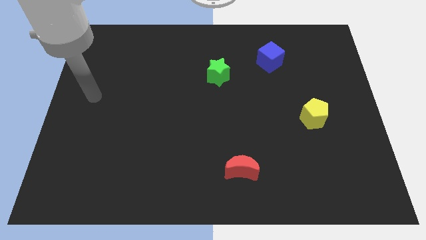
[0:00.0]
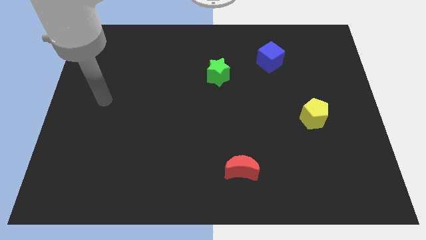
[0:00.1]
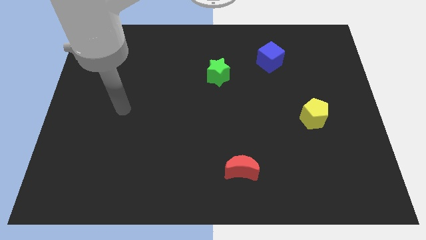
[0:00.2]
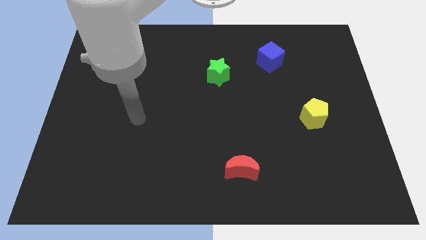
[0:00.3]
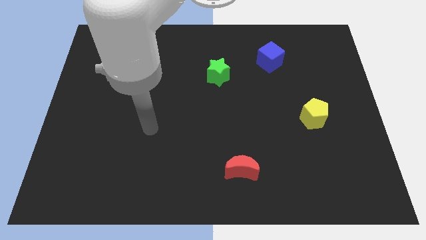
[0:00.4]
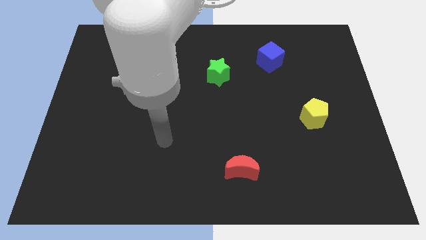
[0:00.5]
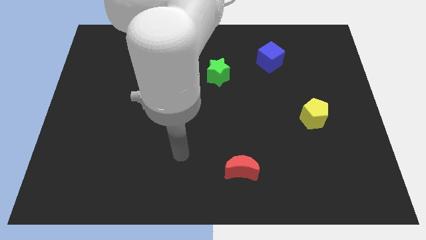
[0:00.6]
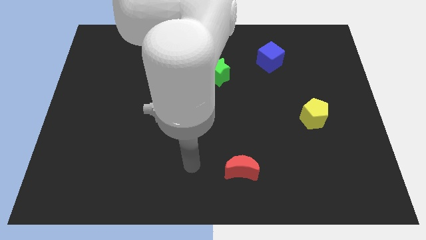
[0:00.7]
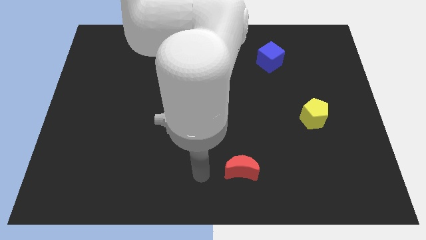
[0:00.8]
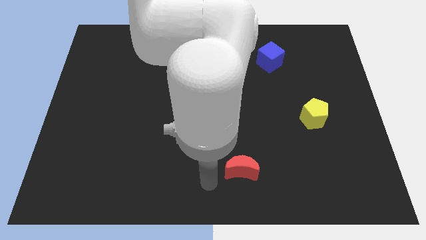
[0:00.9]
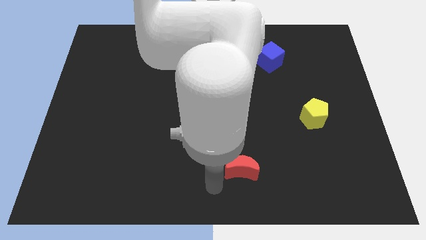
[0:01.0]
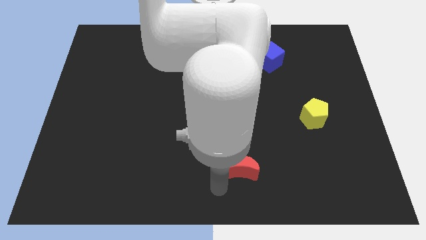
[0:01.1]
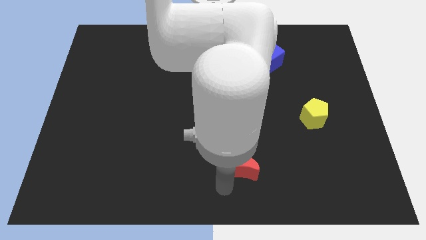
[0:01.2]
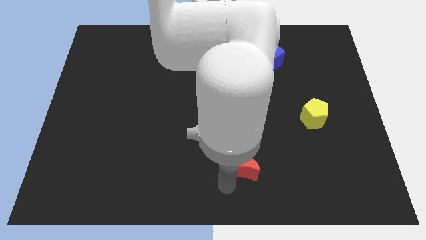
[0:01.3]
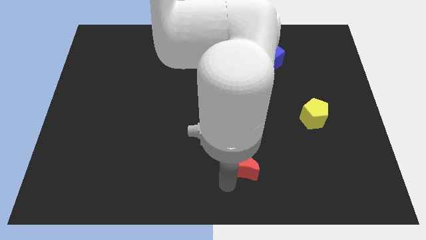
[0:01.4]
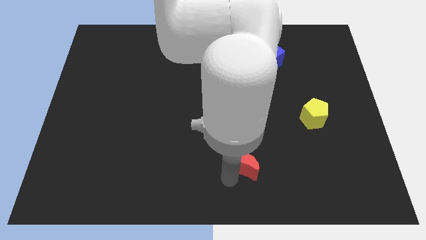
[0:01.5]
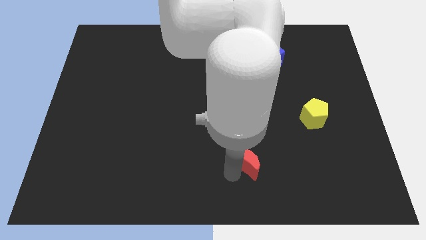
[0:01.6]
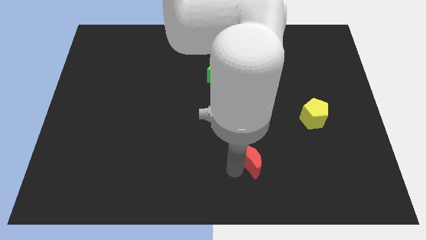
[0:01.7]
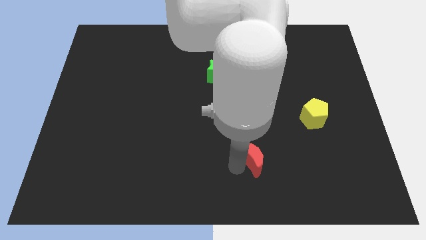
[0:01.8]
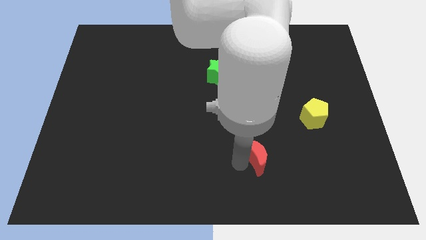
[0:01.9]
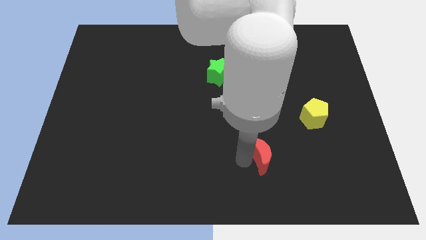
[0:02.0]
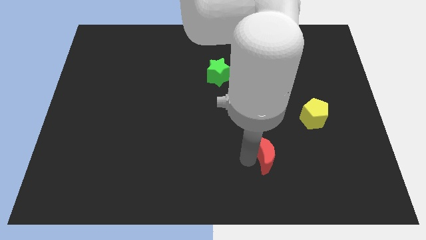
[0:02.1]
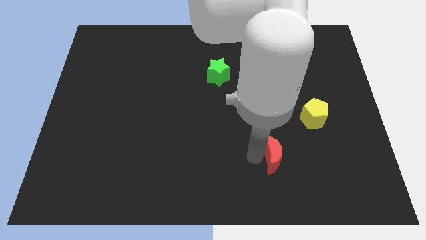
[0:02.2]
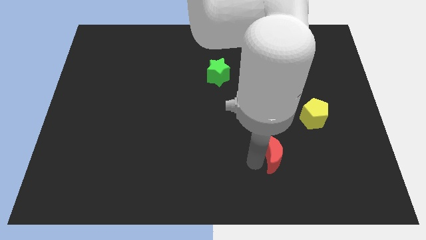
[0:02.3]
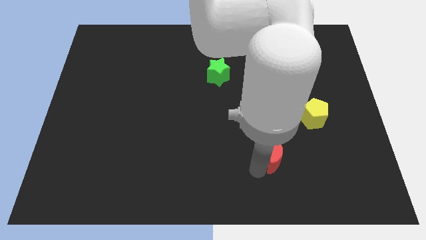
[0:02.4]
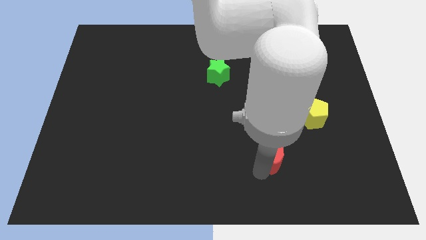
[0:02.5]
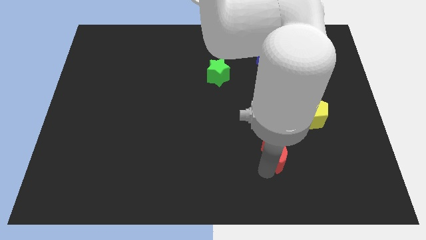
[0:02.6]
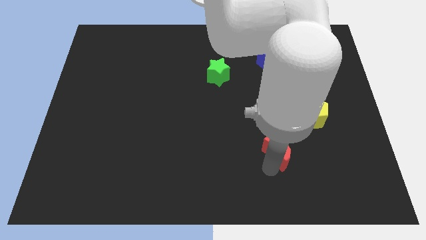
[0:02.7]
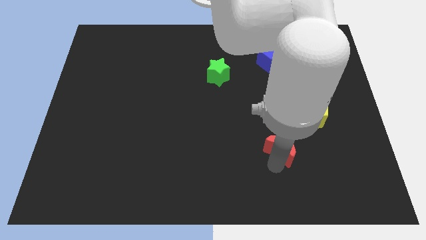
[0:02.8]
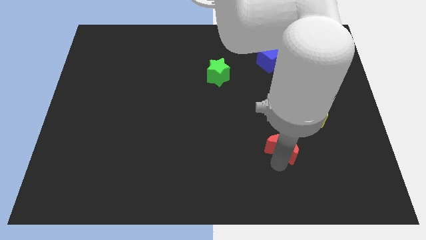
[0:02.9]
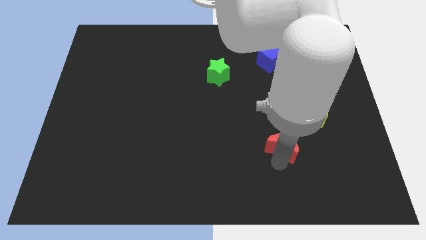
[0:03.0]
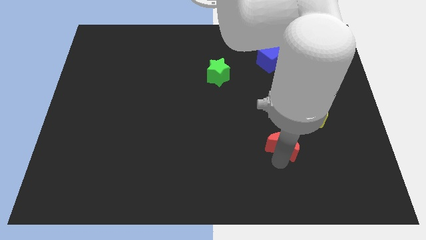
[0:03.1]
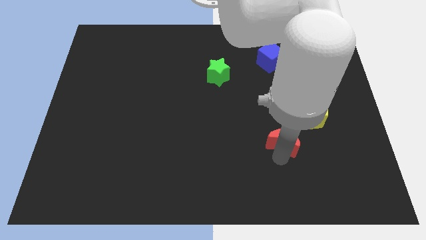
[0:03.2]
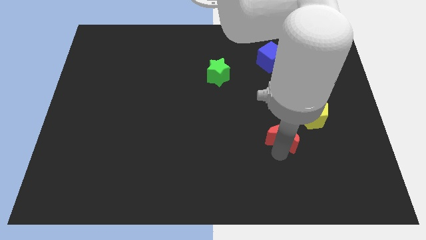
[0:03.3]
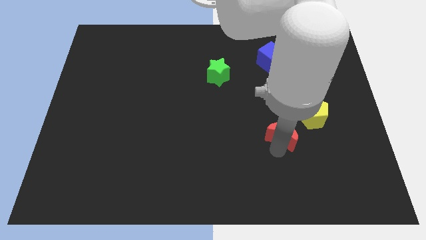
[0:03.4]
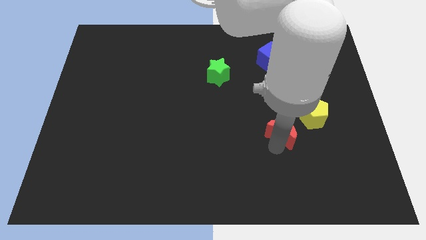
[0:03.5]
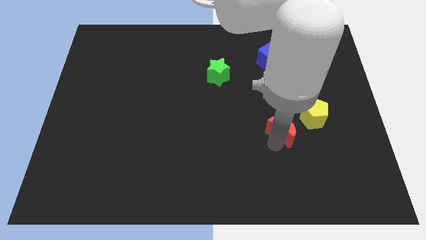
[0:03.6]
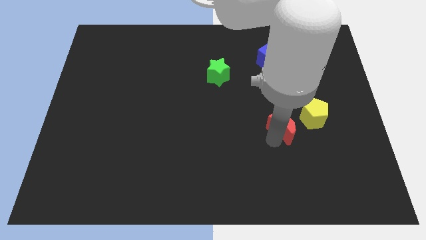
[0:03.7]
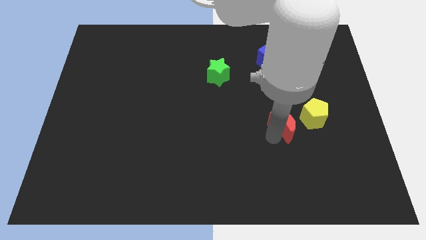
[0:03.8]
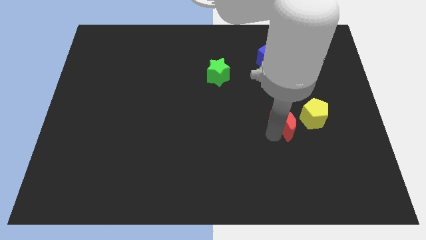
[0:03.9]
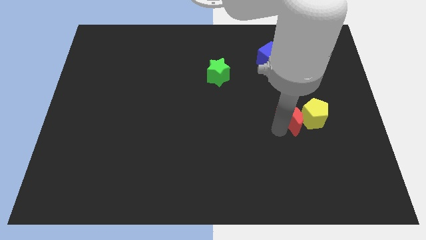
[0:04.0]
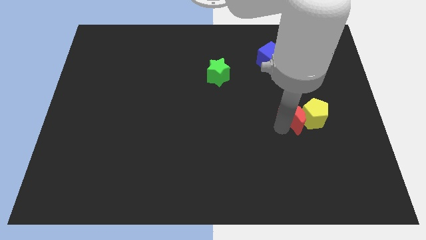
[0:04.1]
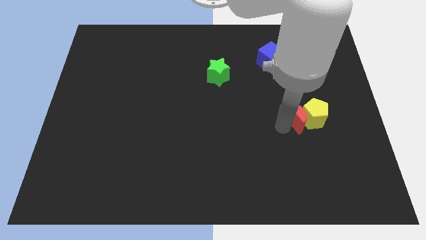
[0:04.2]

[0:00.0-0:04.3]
move the red block towards the yellow pentagon

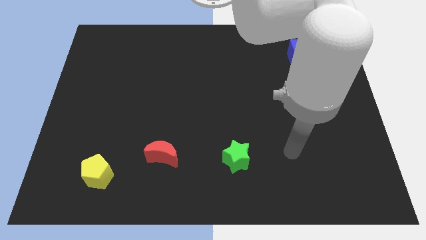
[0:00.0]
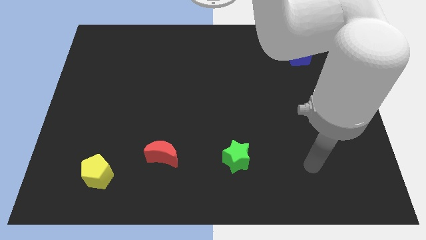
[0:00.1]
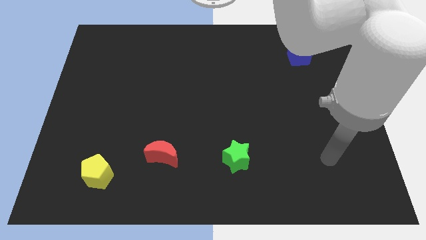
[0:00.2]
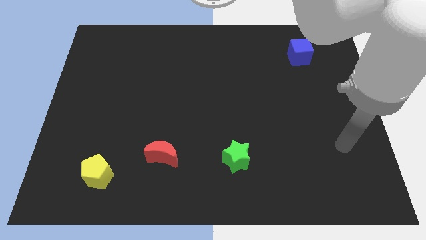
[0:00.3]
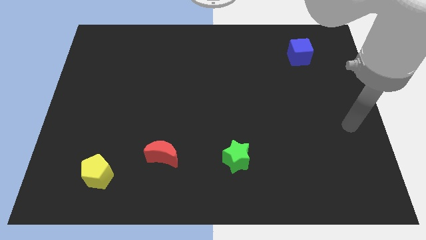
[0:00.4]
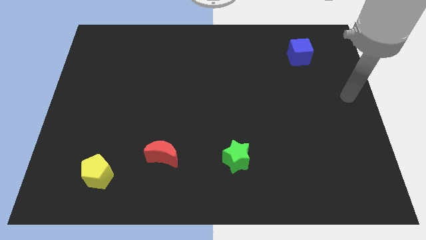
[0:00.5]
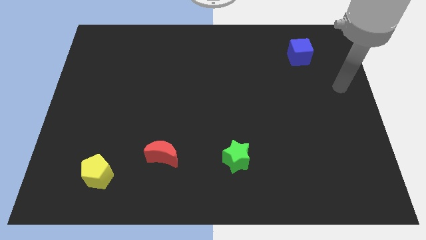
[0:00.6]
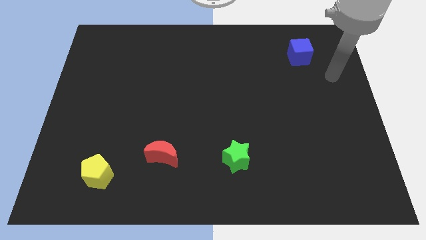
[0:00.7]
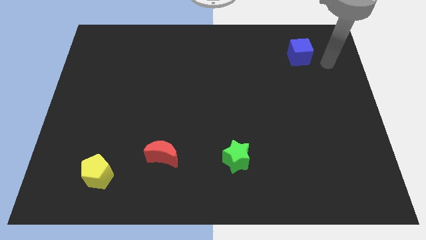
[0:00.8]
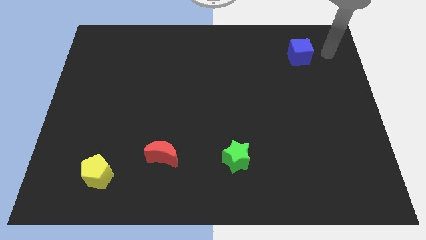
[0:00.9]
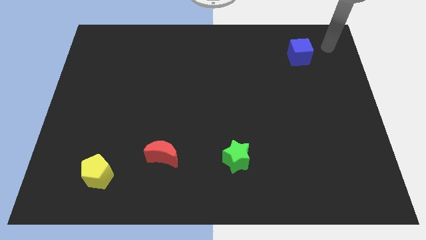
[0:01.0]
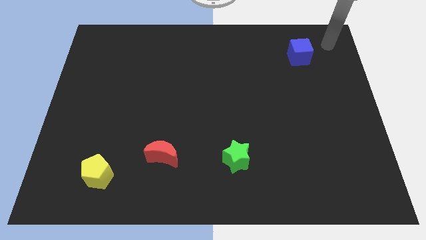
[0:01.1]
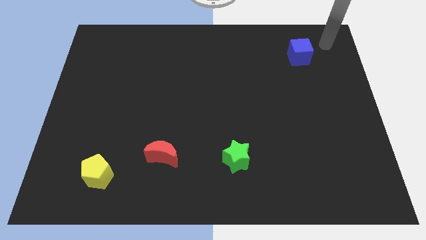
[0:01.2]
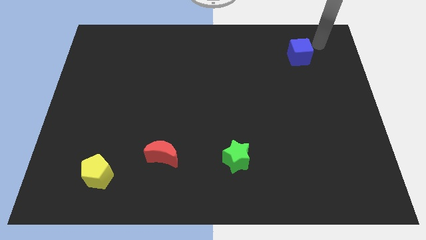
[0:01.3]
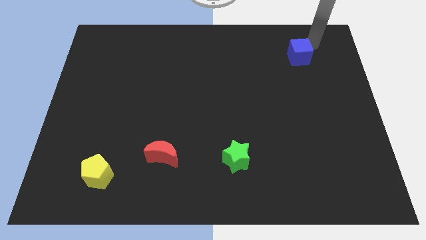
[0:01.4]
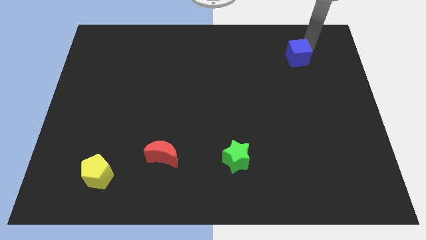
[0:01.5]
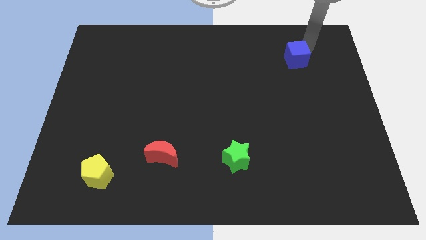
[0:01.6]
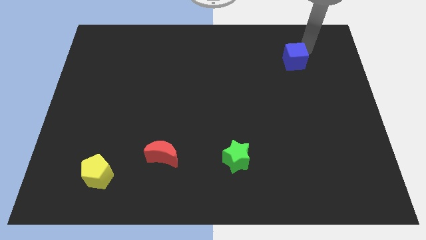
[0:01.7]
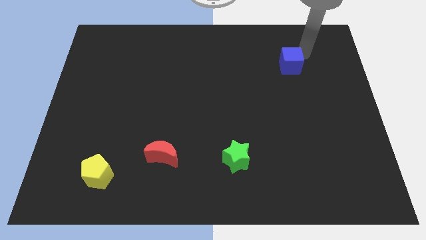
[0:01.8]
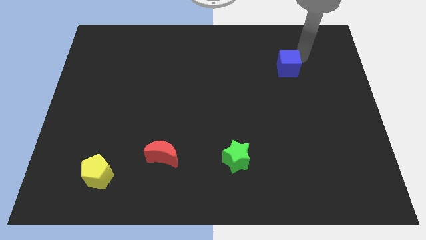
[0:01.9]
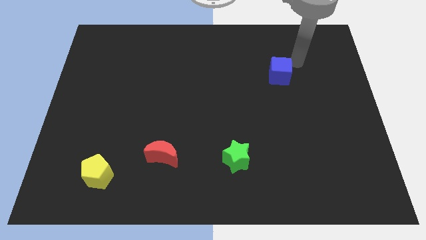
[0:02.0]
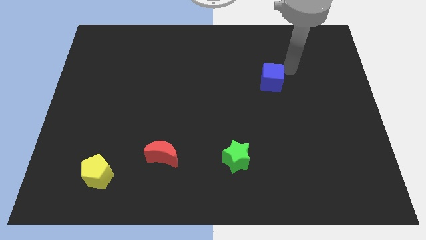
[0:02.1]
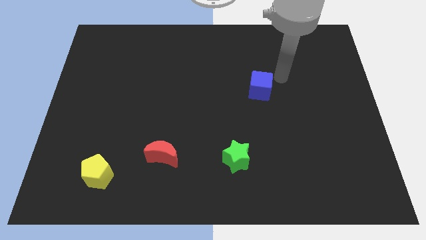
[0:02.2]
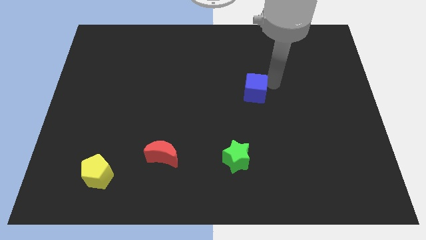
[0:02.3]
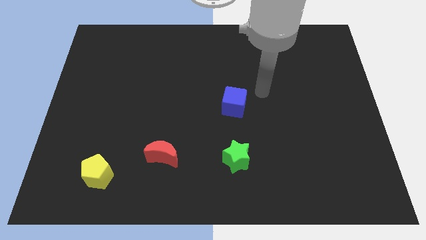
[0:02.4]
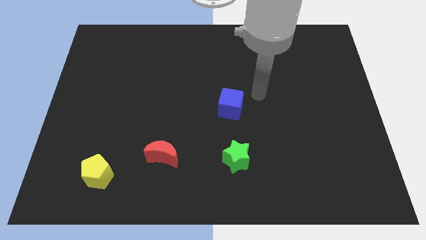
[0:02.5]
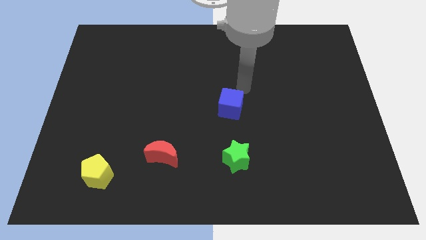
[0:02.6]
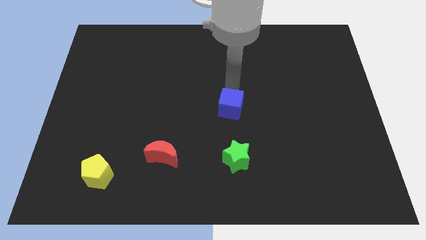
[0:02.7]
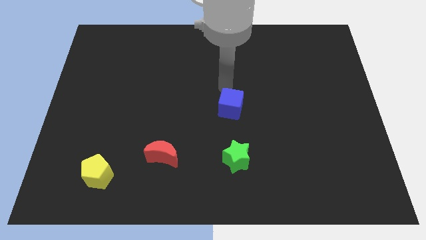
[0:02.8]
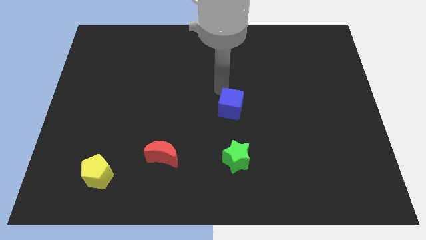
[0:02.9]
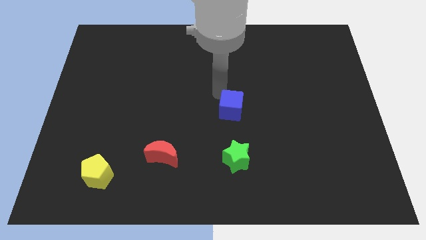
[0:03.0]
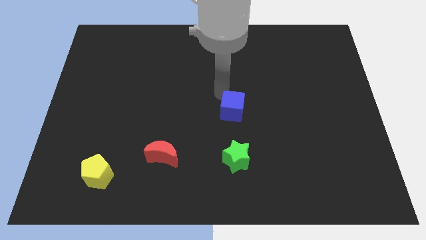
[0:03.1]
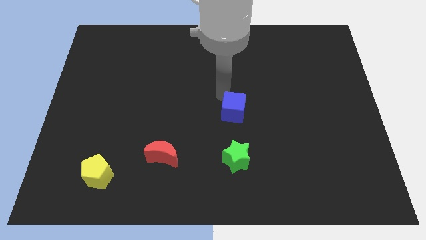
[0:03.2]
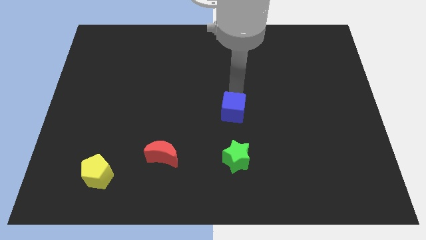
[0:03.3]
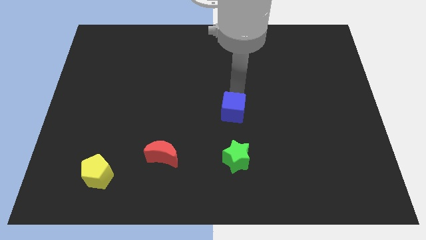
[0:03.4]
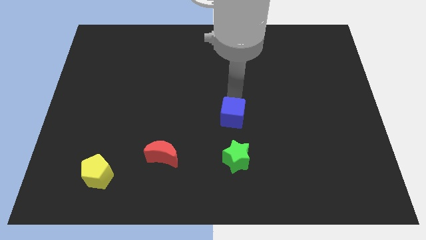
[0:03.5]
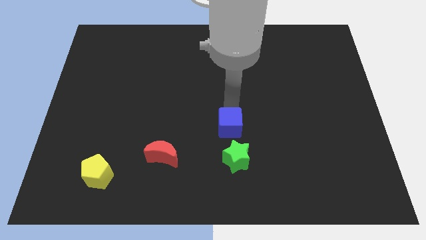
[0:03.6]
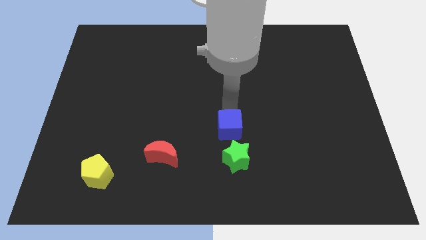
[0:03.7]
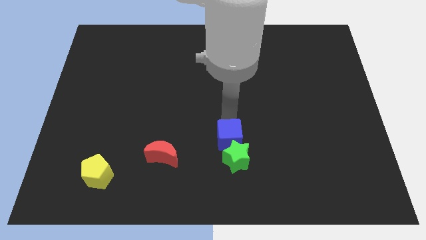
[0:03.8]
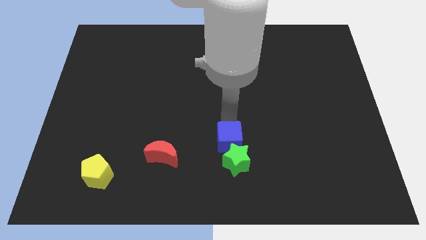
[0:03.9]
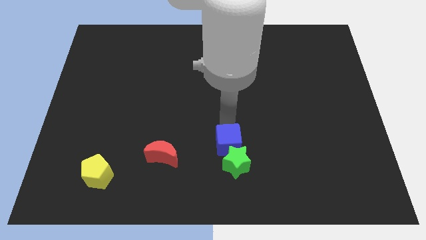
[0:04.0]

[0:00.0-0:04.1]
put the blue block to the green star

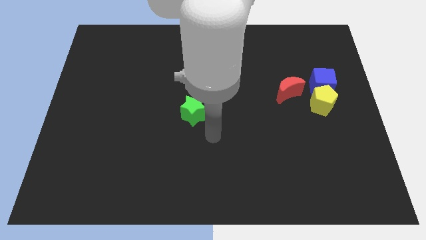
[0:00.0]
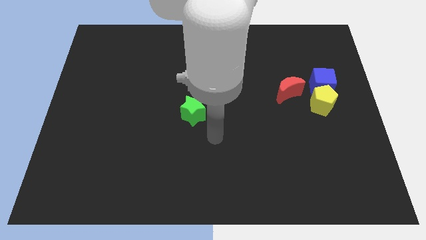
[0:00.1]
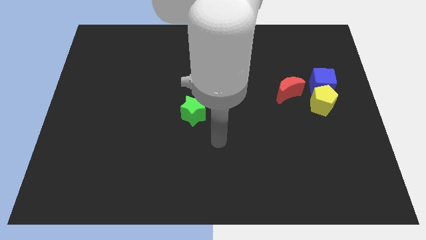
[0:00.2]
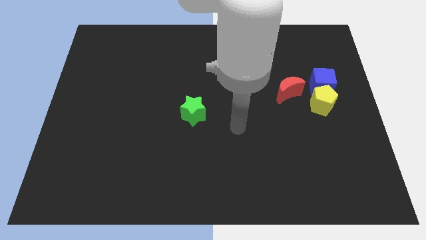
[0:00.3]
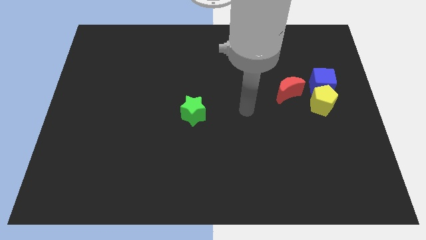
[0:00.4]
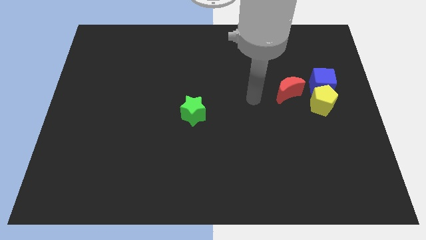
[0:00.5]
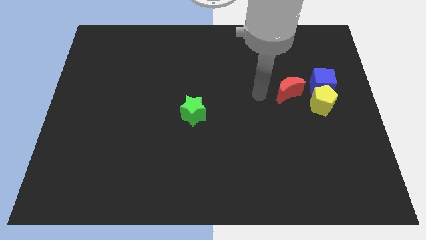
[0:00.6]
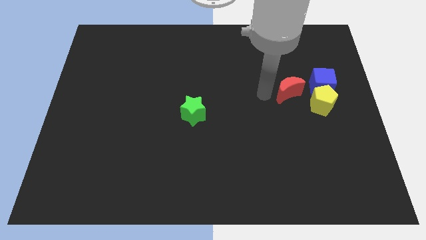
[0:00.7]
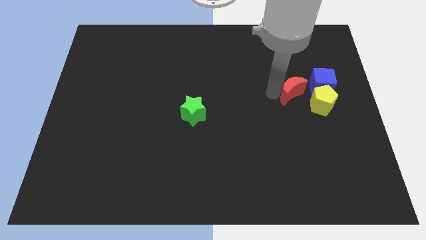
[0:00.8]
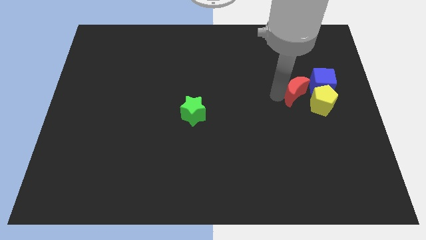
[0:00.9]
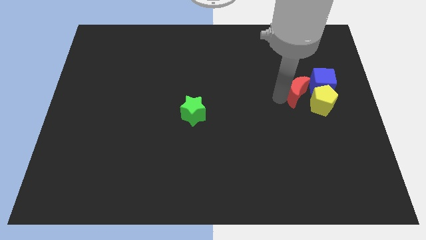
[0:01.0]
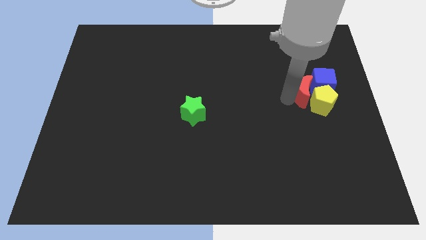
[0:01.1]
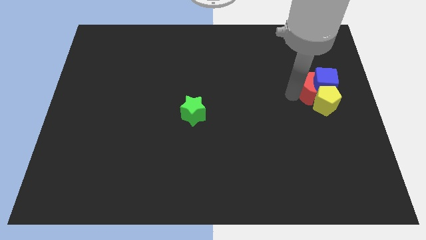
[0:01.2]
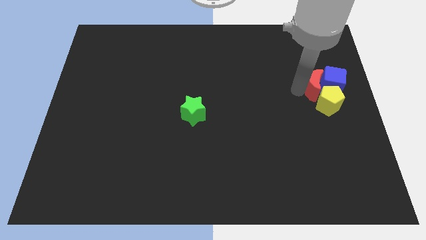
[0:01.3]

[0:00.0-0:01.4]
push the red block to the blue block
